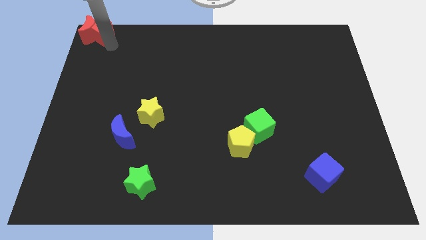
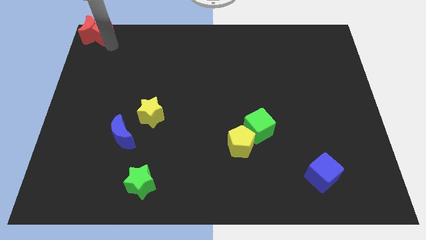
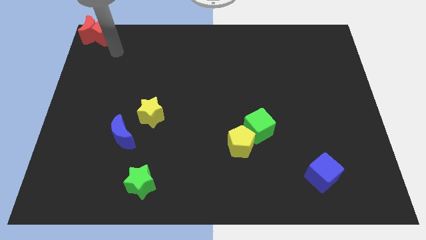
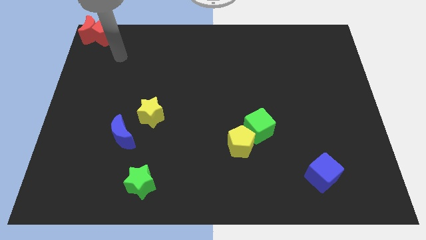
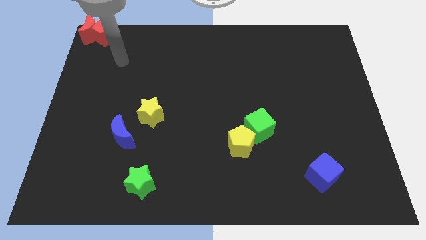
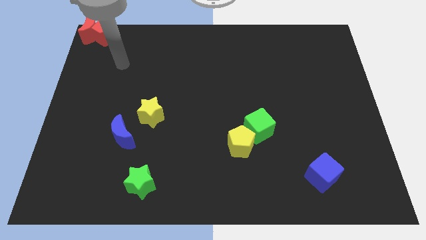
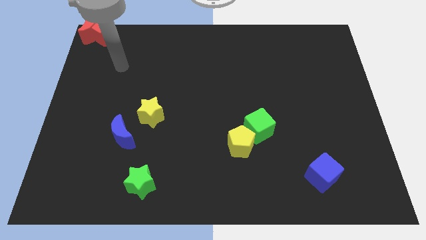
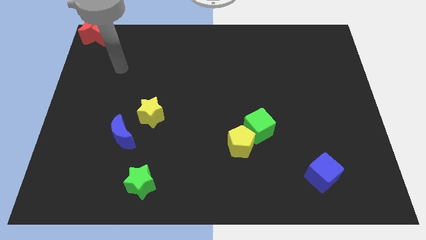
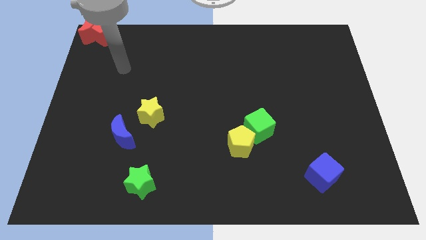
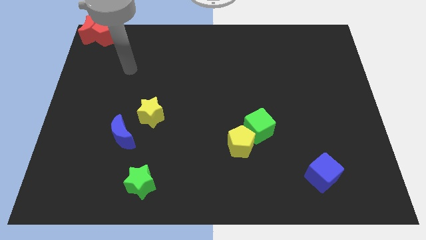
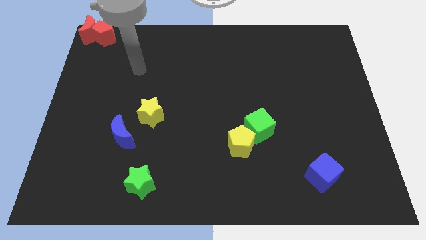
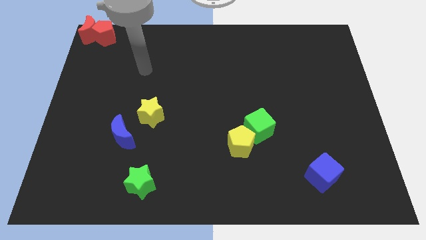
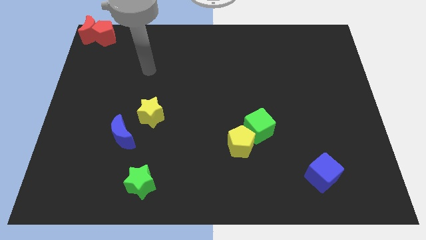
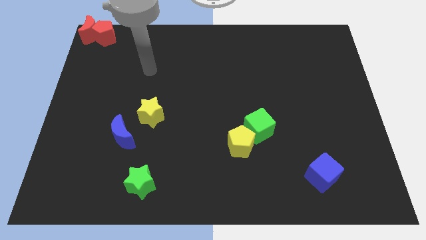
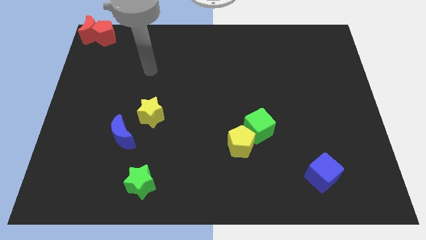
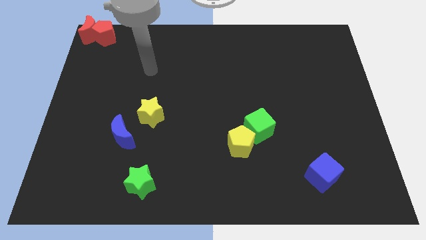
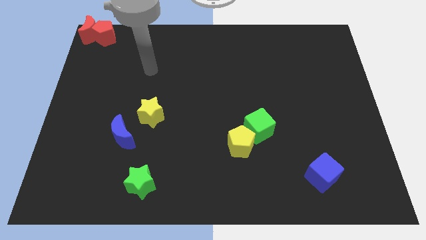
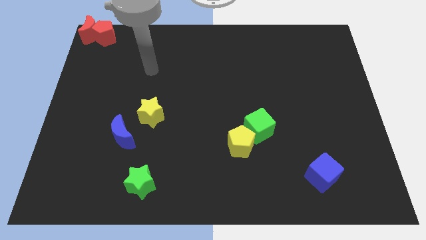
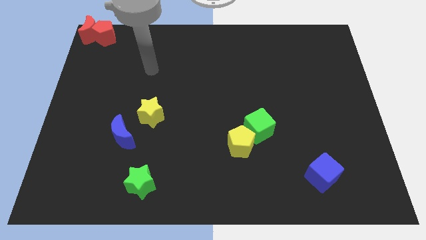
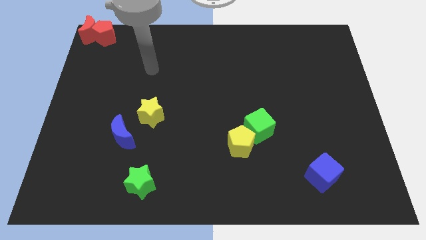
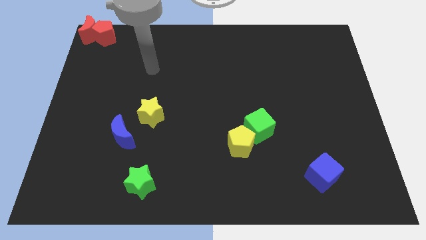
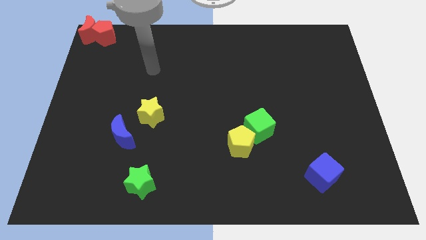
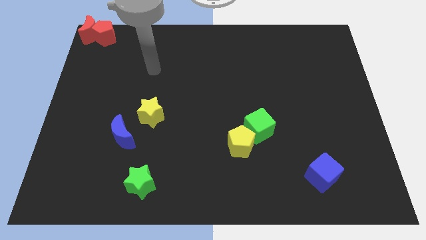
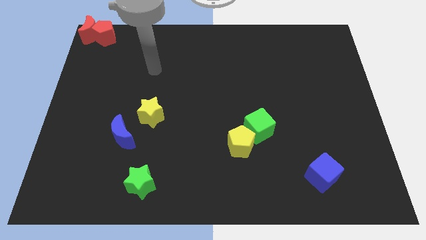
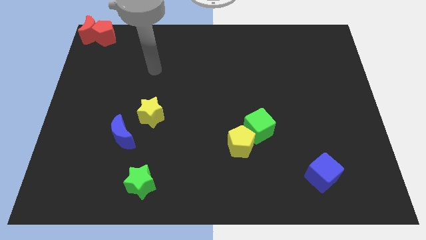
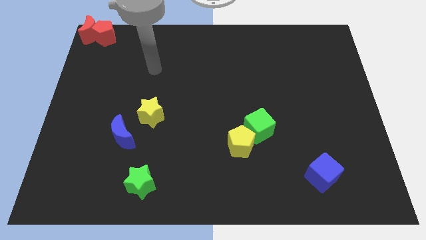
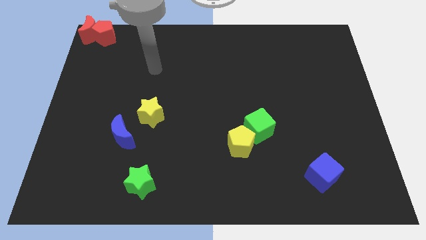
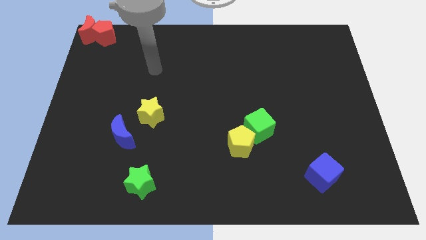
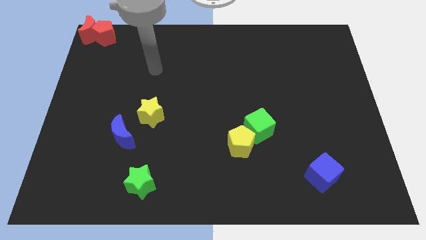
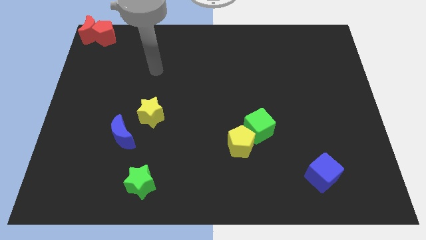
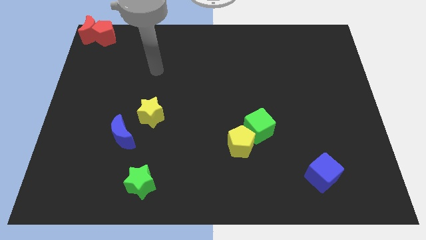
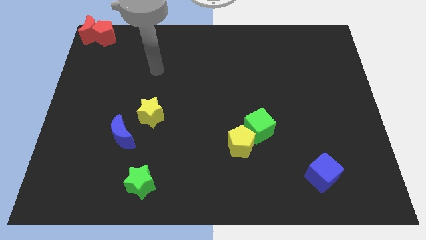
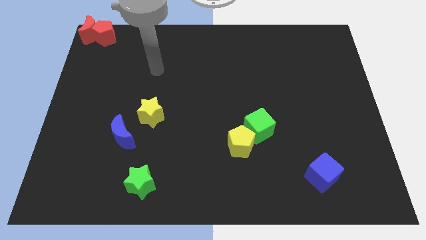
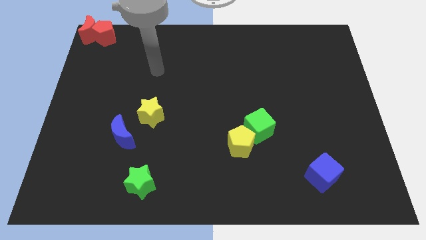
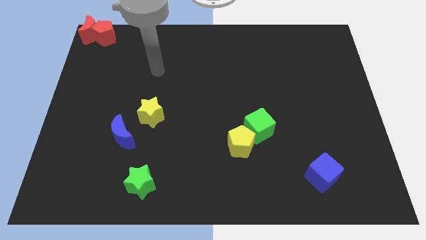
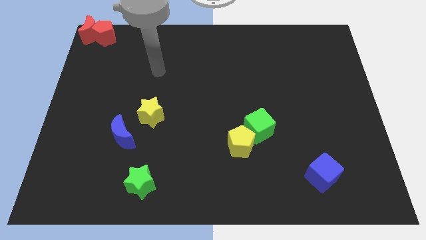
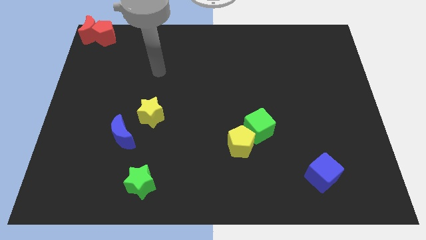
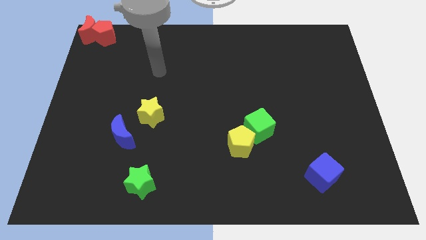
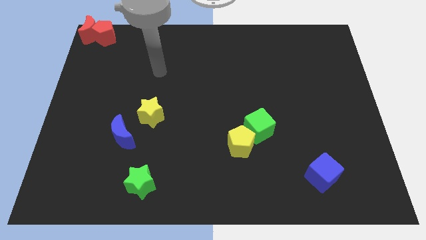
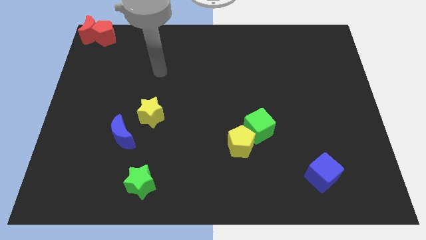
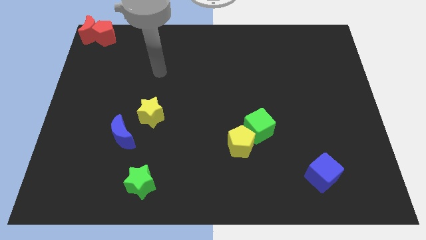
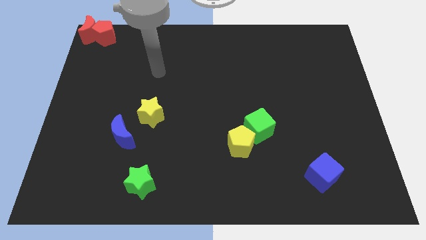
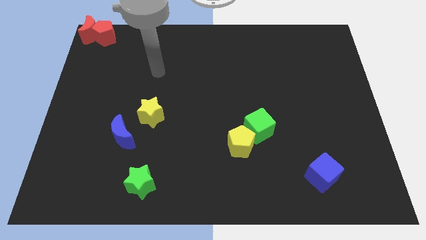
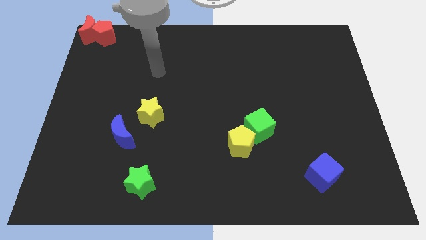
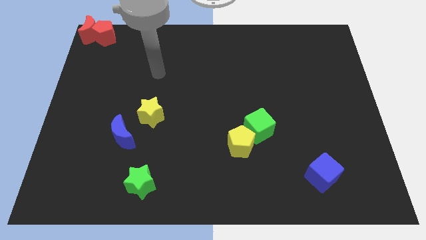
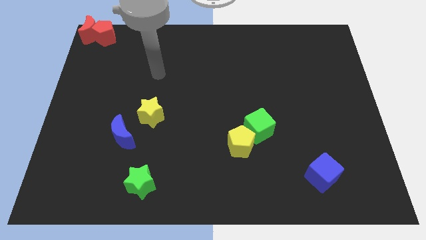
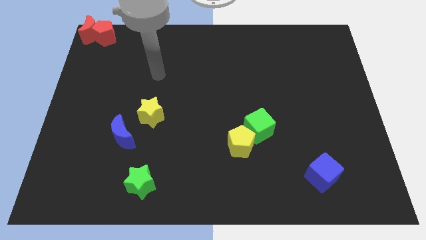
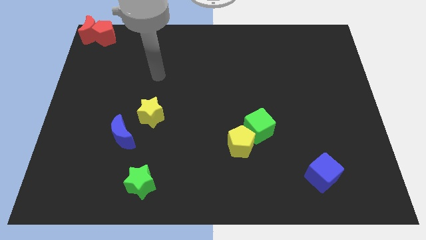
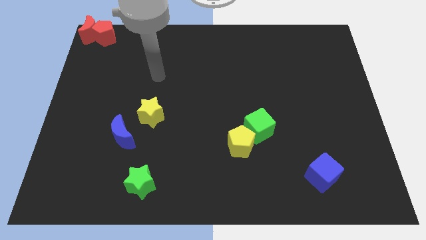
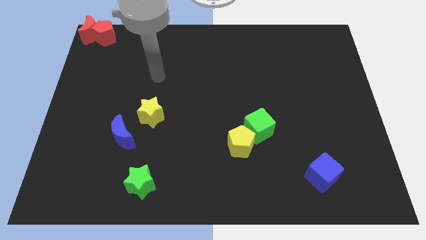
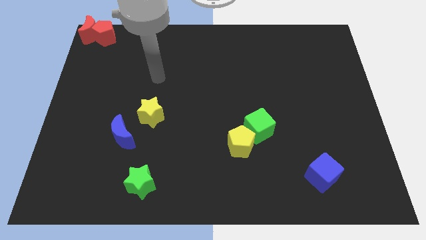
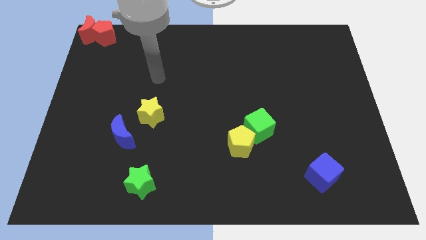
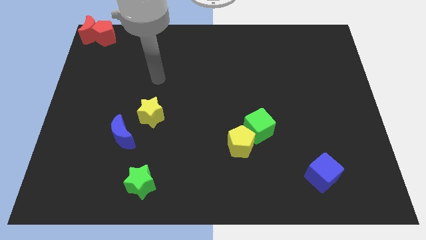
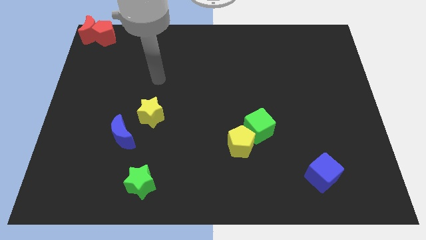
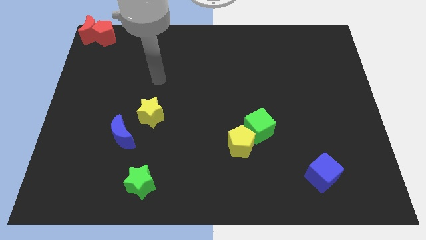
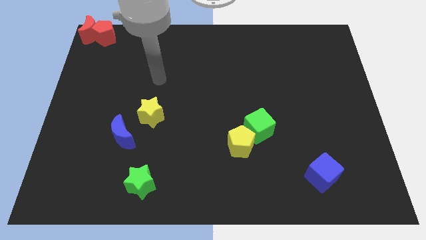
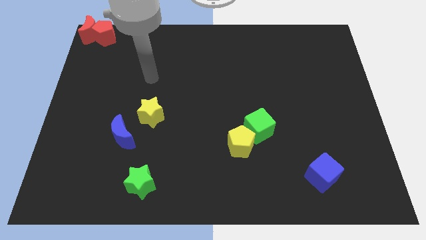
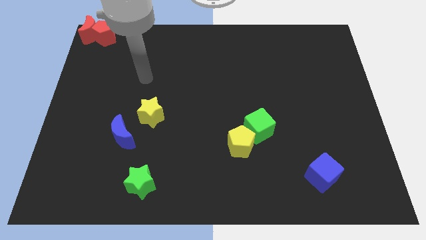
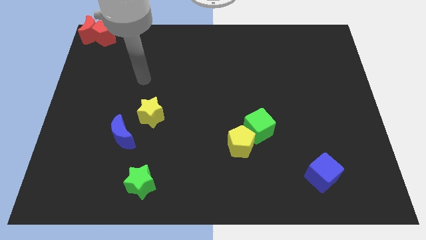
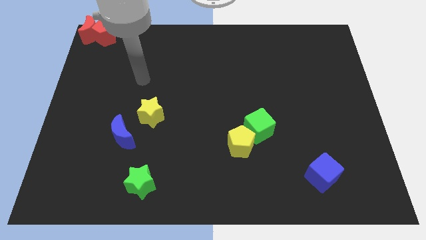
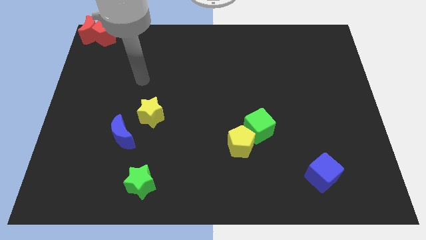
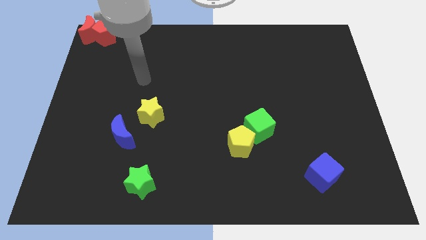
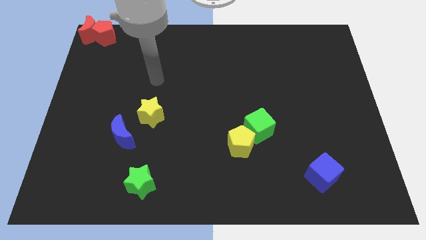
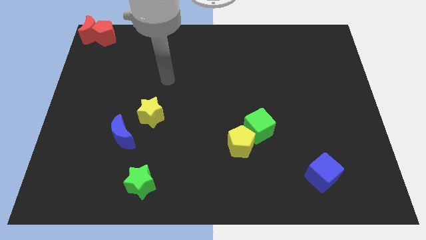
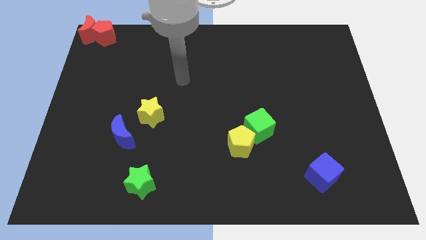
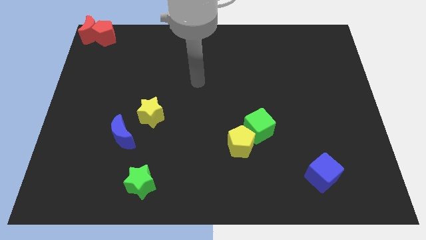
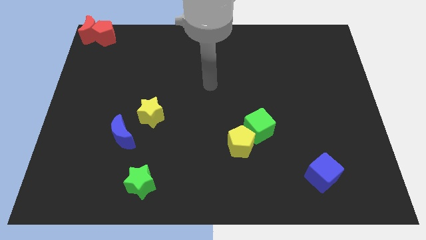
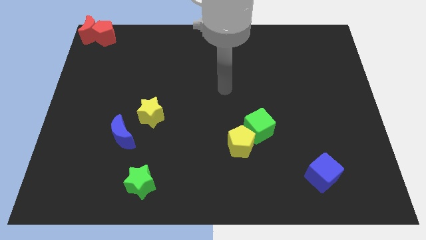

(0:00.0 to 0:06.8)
put your arm at the center of the board

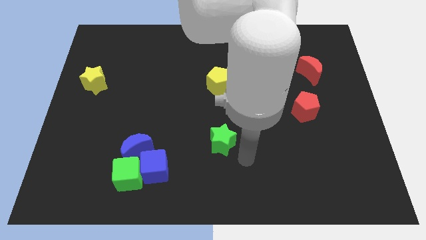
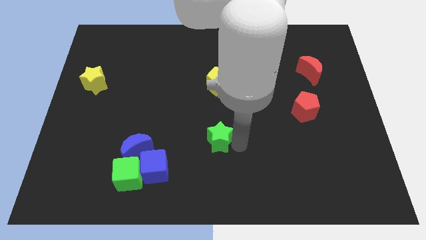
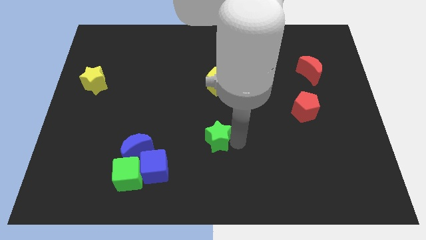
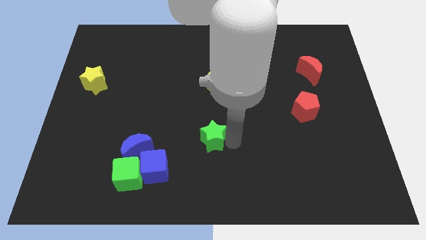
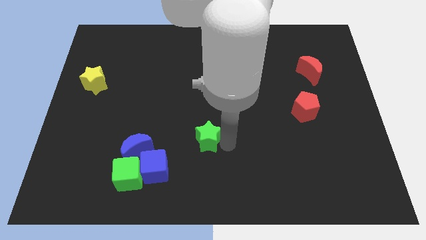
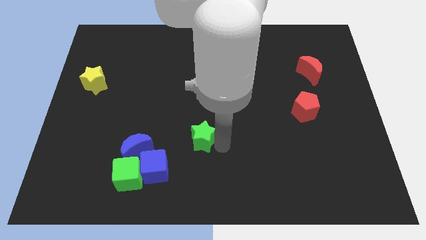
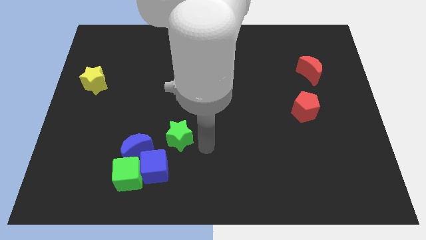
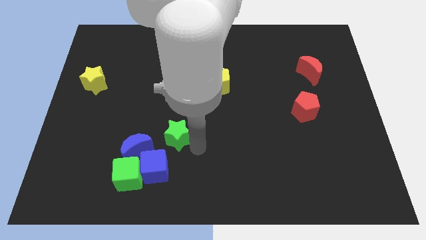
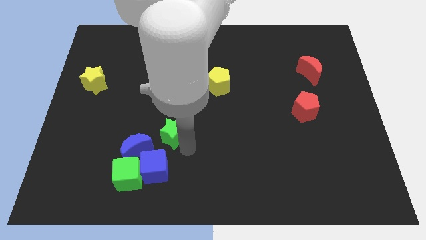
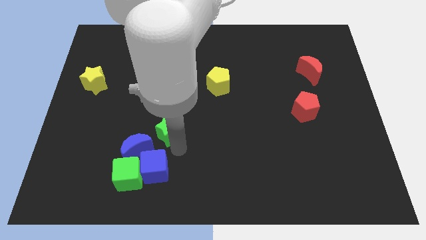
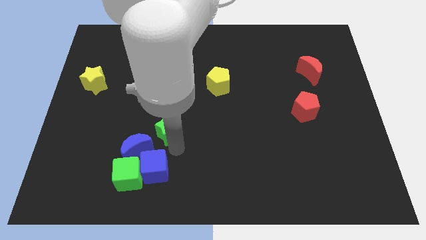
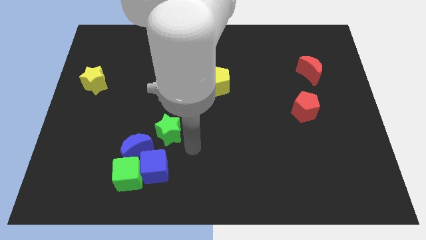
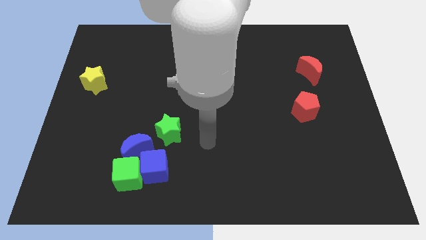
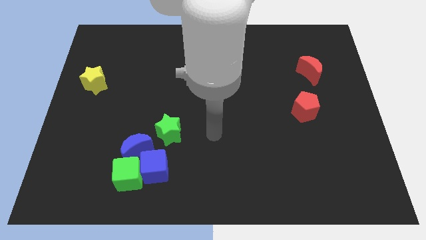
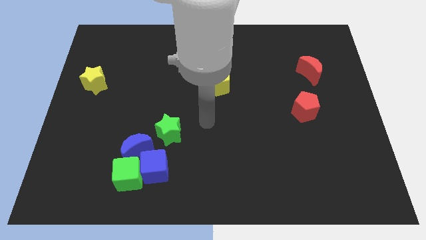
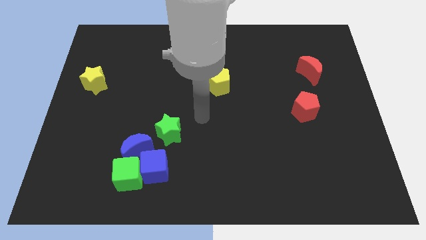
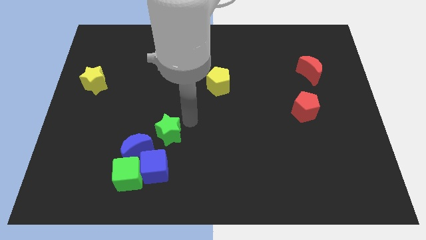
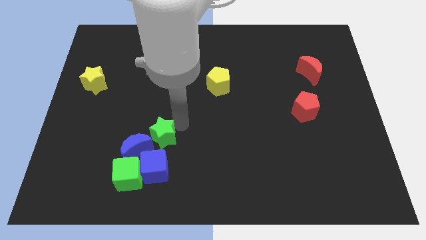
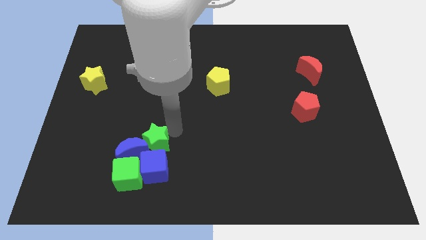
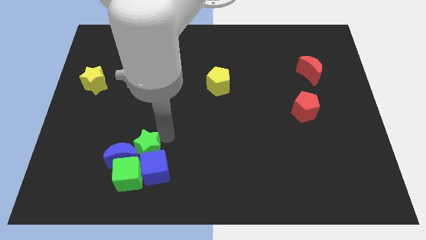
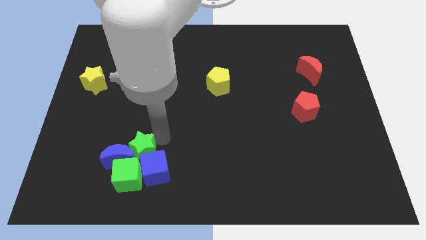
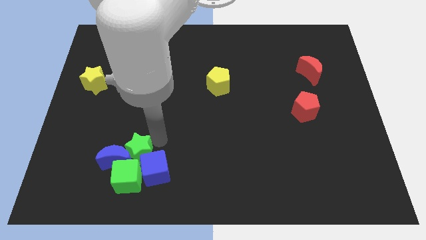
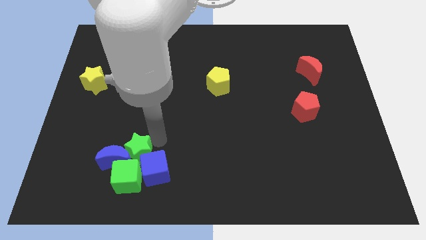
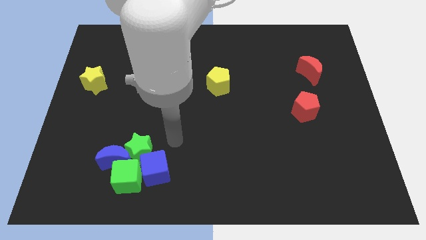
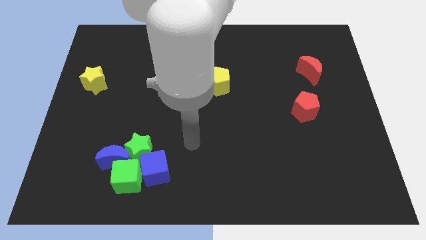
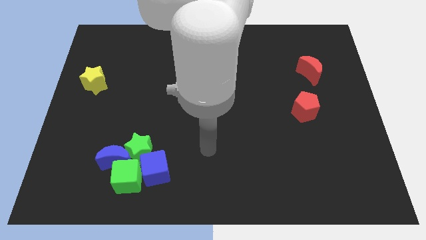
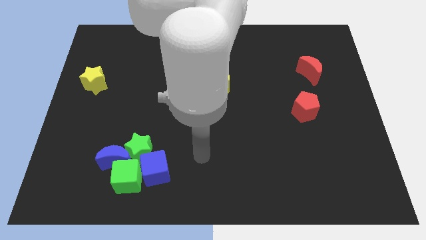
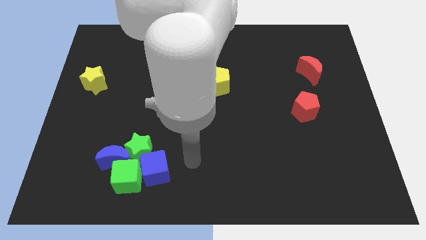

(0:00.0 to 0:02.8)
push the green star to the group of object
